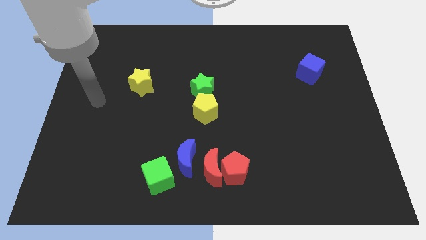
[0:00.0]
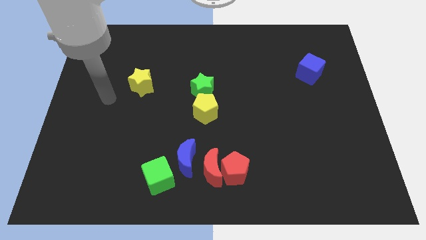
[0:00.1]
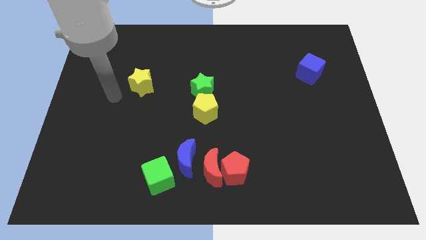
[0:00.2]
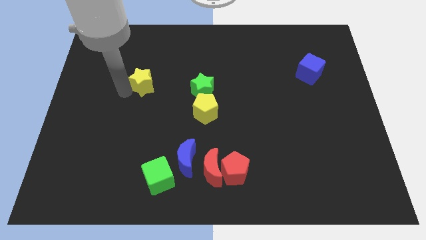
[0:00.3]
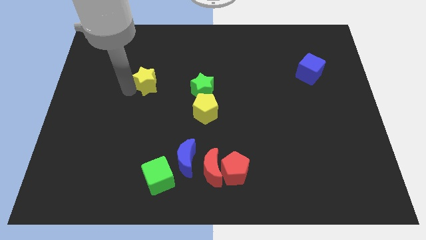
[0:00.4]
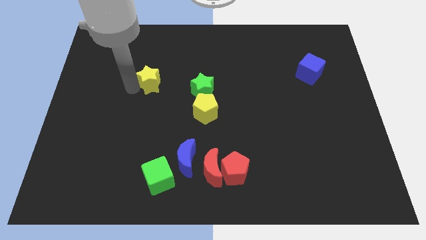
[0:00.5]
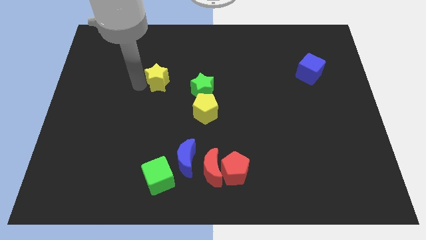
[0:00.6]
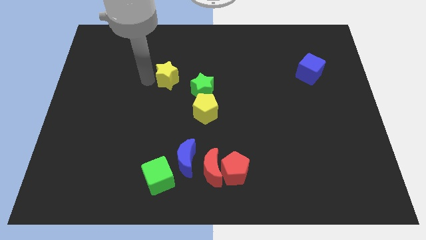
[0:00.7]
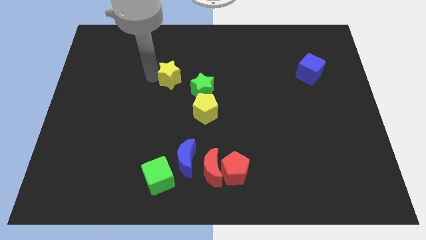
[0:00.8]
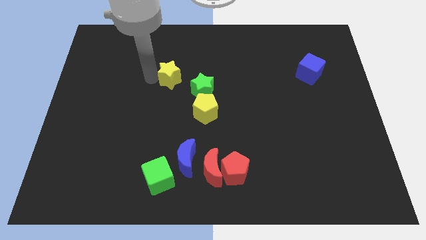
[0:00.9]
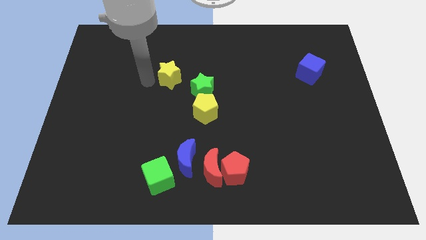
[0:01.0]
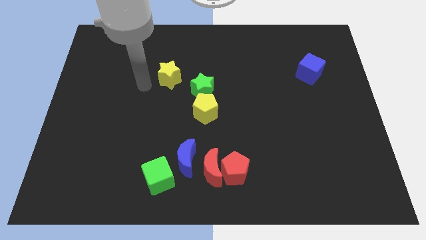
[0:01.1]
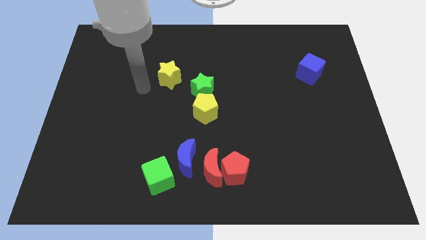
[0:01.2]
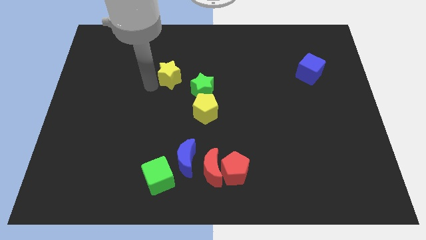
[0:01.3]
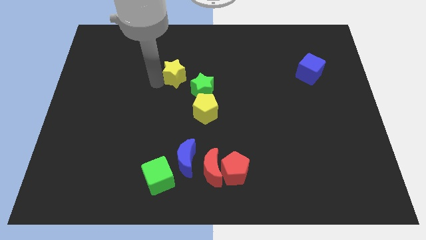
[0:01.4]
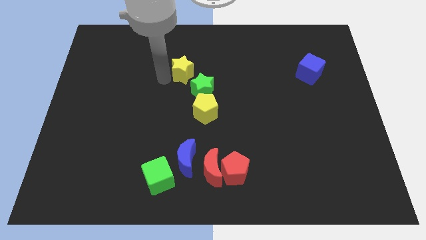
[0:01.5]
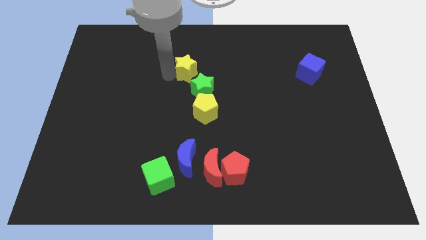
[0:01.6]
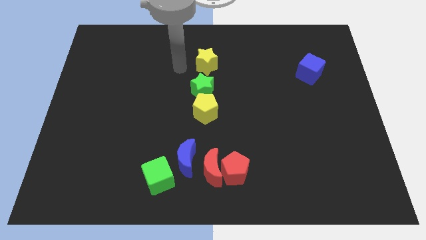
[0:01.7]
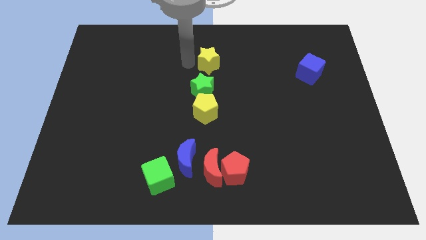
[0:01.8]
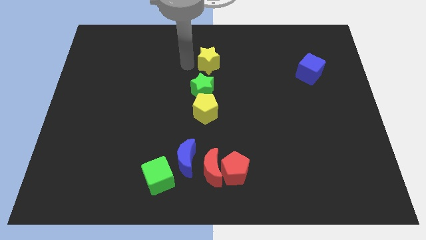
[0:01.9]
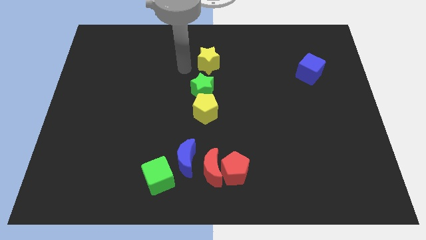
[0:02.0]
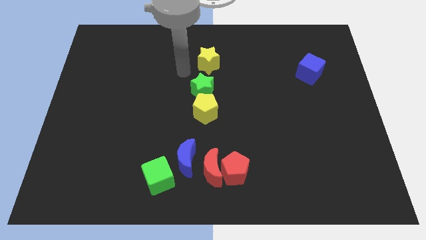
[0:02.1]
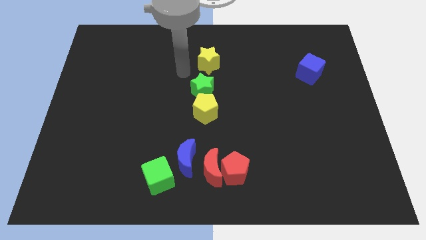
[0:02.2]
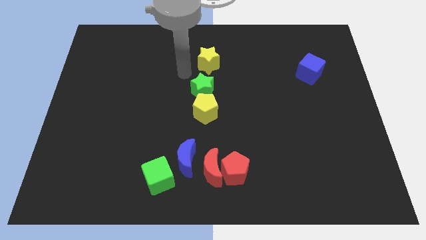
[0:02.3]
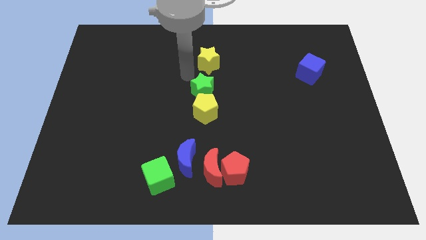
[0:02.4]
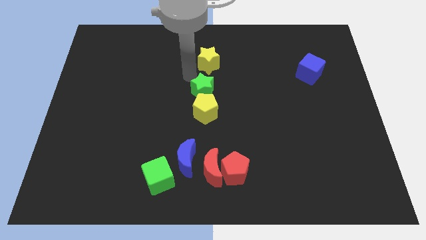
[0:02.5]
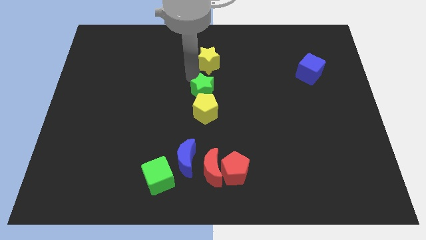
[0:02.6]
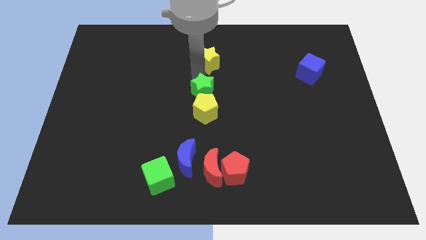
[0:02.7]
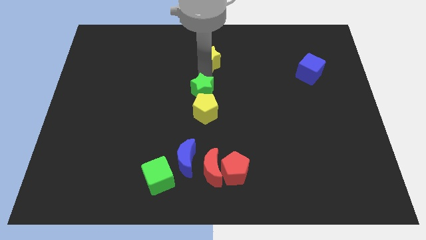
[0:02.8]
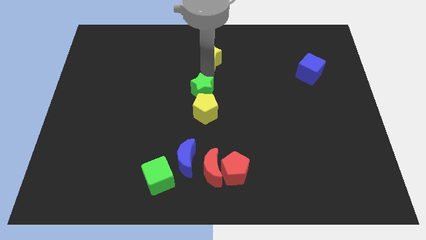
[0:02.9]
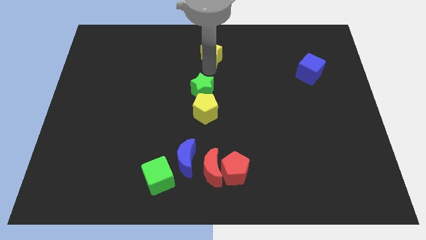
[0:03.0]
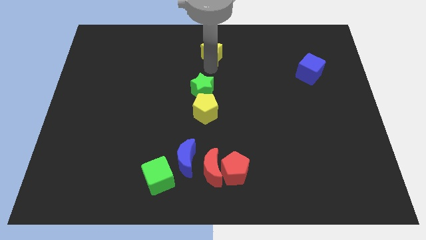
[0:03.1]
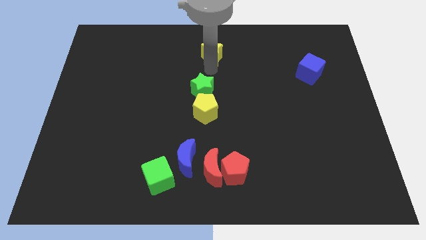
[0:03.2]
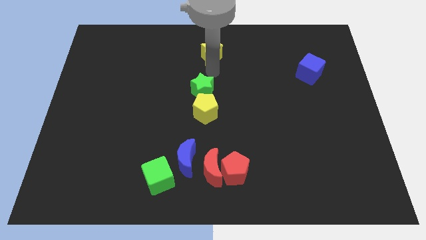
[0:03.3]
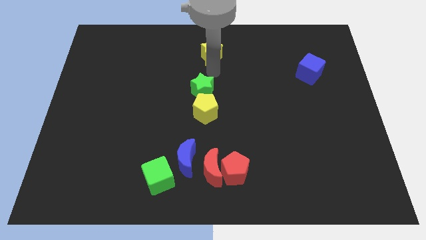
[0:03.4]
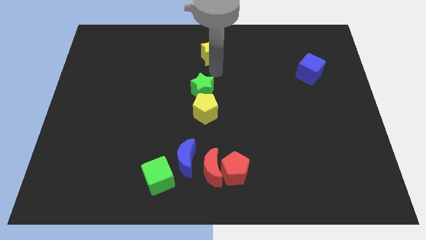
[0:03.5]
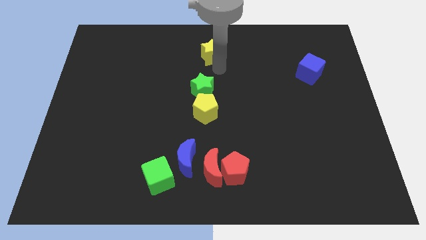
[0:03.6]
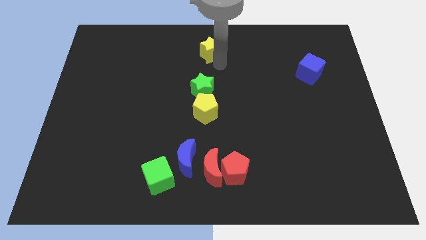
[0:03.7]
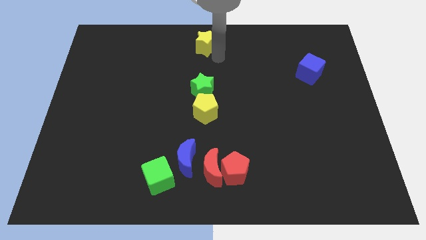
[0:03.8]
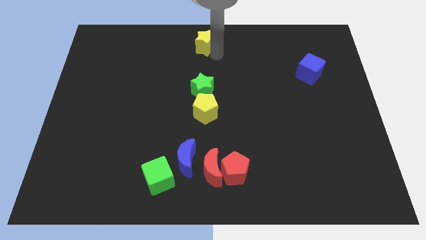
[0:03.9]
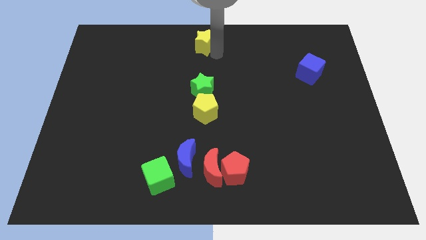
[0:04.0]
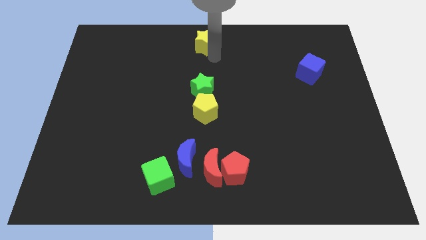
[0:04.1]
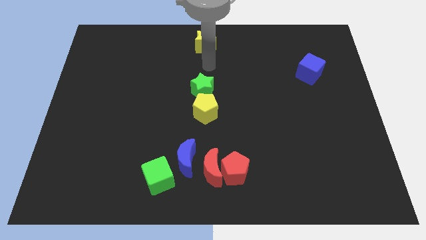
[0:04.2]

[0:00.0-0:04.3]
move the yellow star vertically above the green star

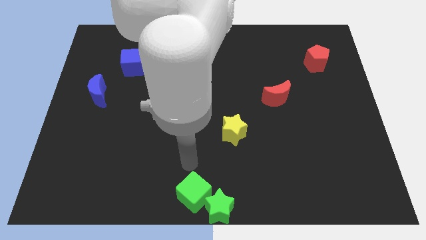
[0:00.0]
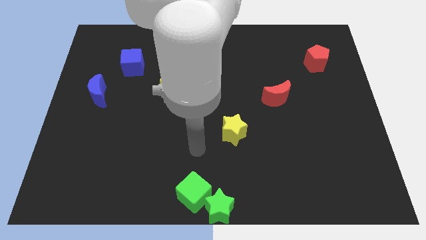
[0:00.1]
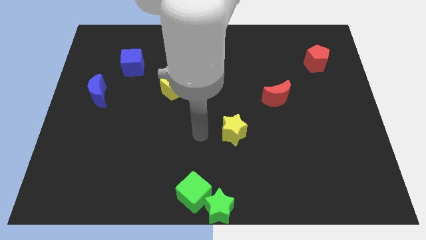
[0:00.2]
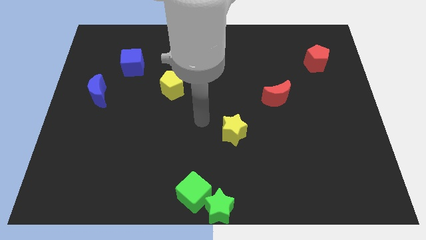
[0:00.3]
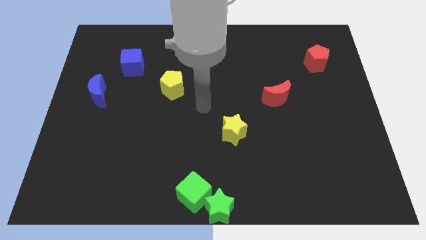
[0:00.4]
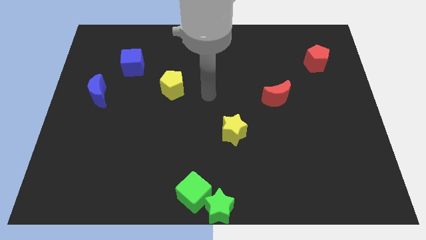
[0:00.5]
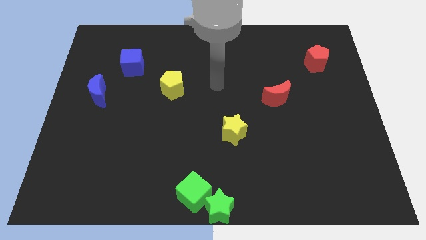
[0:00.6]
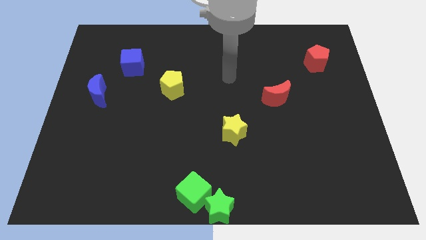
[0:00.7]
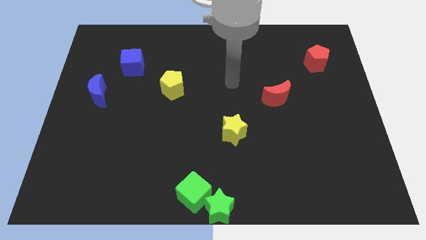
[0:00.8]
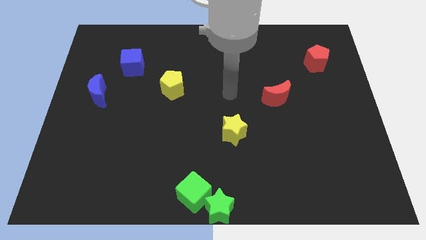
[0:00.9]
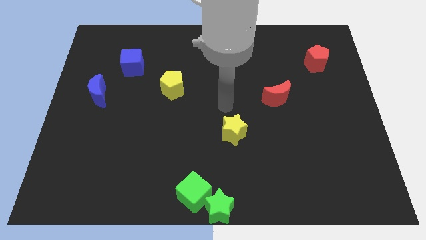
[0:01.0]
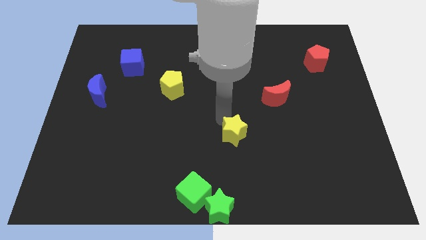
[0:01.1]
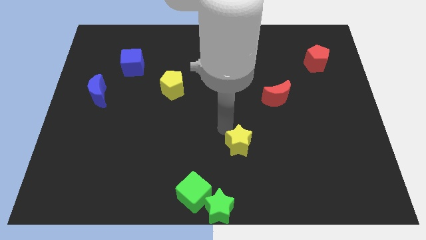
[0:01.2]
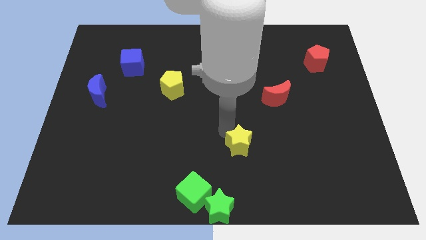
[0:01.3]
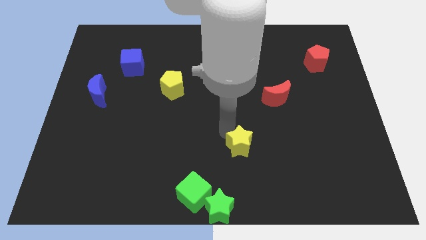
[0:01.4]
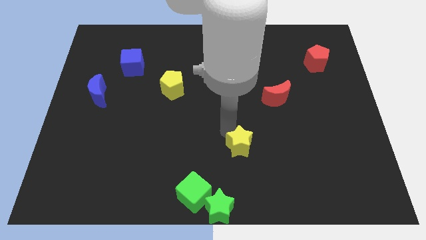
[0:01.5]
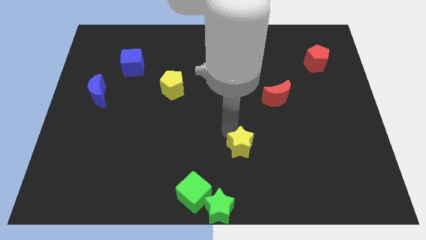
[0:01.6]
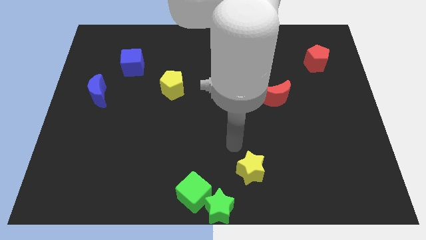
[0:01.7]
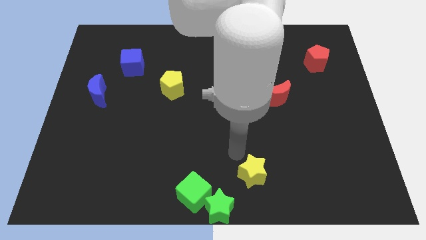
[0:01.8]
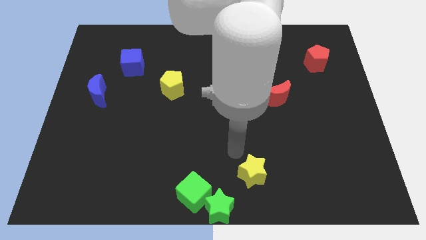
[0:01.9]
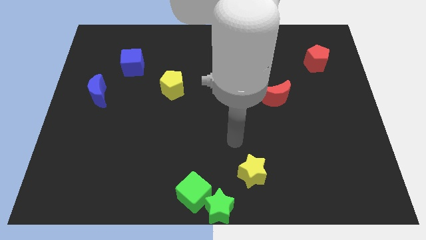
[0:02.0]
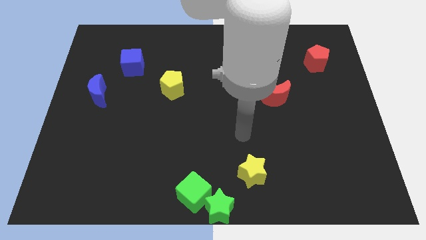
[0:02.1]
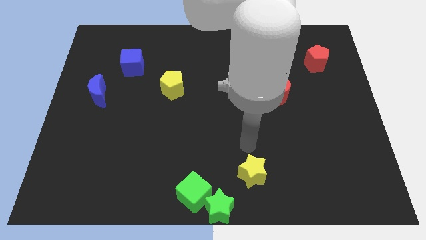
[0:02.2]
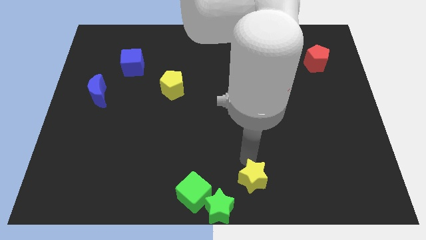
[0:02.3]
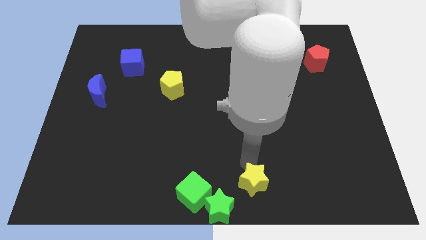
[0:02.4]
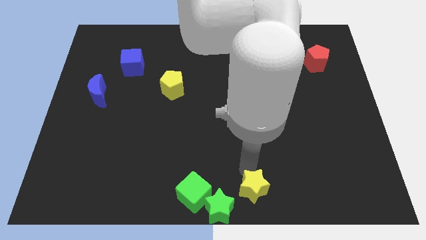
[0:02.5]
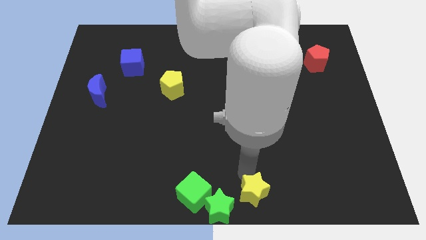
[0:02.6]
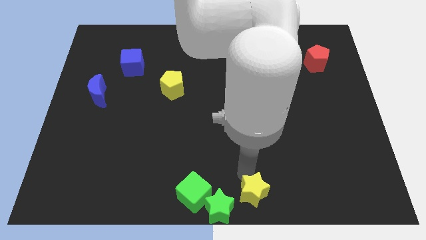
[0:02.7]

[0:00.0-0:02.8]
move the yellow star to the top right of the green star

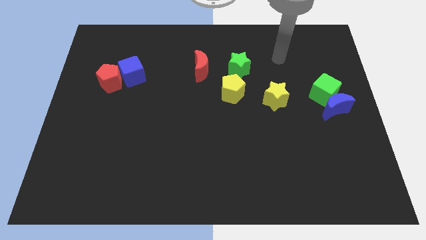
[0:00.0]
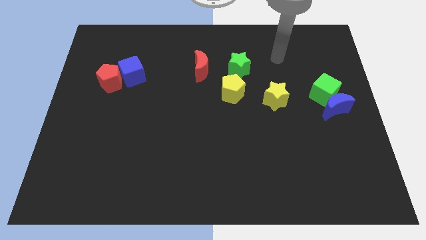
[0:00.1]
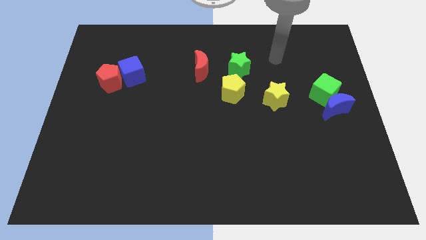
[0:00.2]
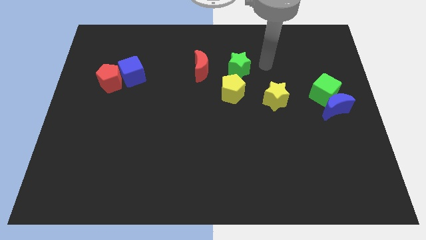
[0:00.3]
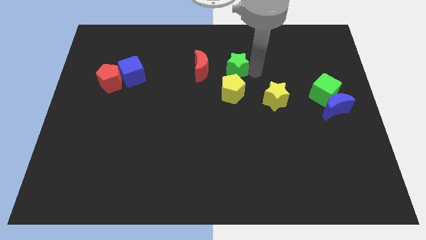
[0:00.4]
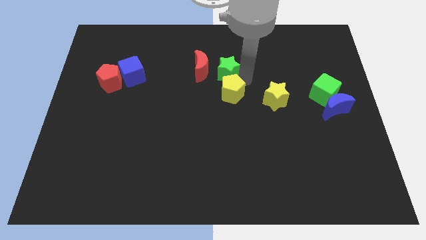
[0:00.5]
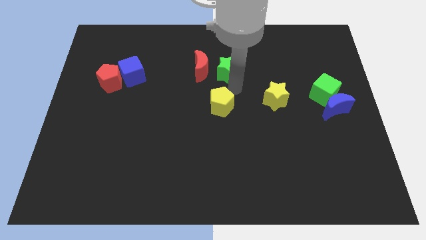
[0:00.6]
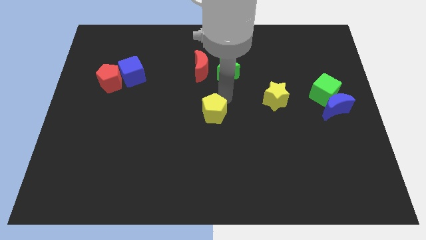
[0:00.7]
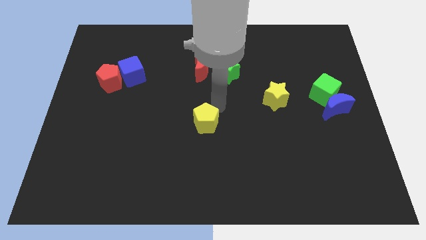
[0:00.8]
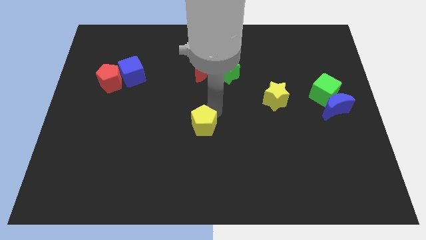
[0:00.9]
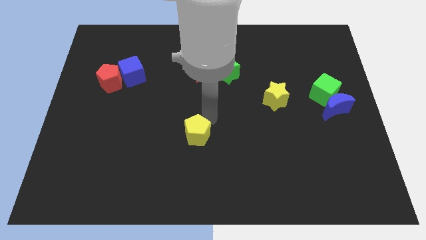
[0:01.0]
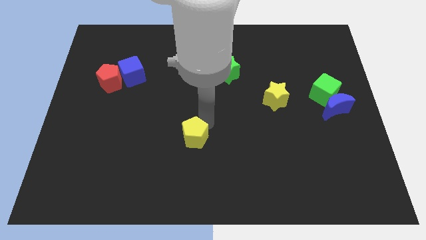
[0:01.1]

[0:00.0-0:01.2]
move the yellow pentagon away from the green star

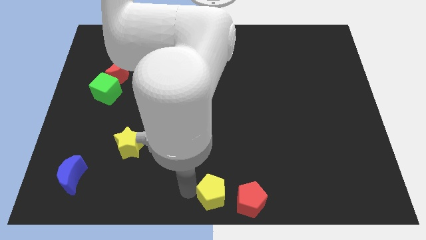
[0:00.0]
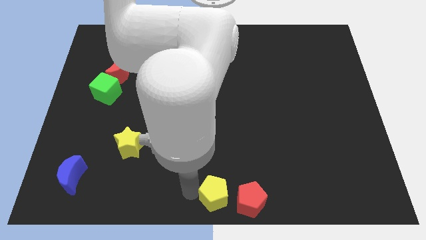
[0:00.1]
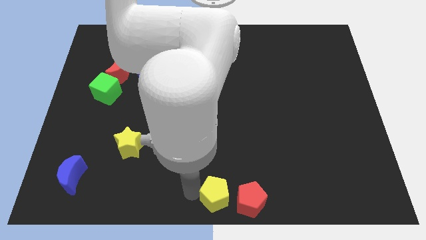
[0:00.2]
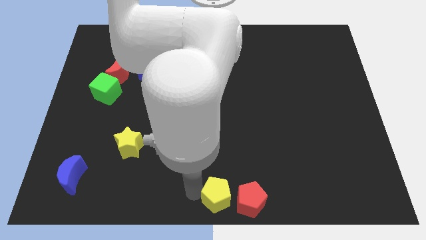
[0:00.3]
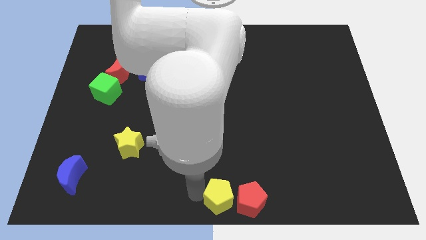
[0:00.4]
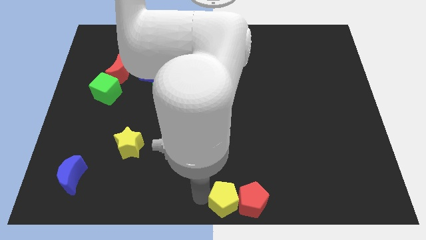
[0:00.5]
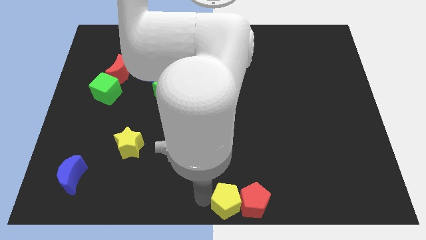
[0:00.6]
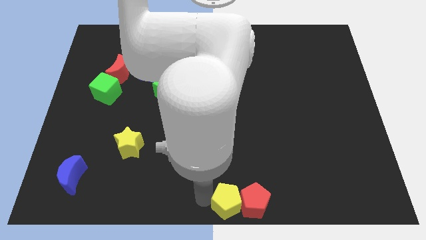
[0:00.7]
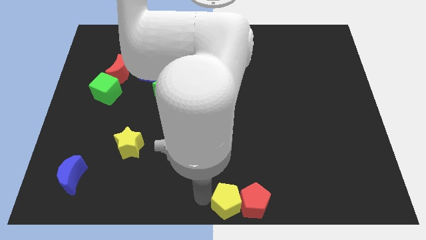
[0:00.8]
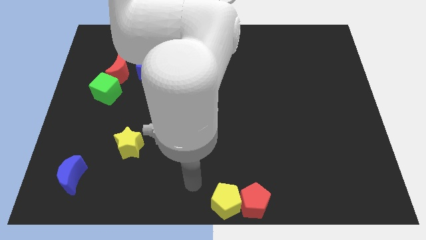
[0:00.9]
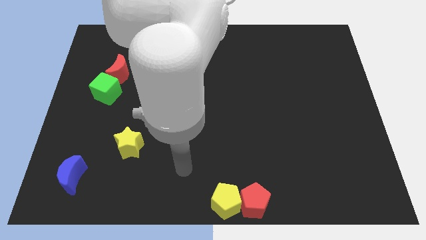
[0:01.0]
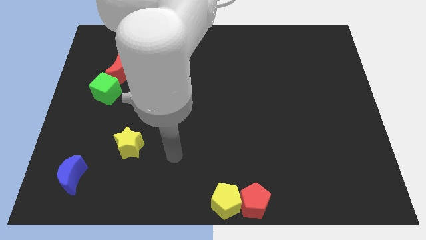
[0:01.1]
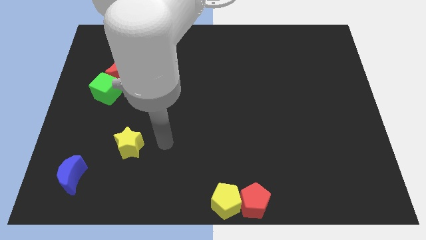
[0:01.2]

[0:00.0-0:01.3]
push the yellow pentagon into the red pentagon
